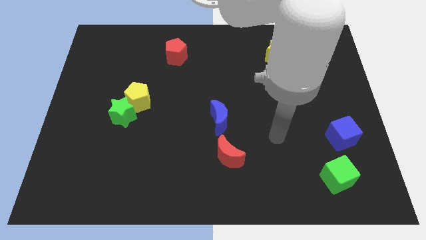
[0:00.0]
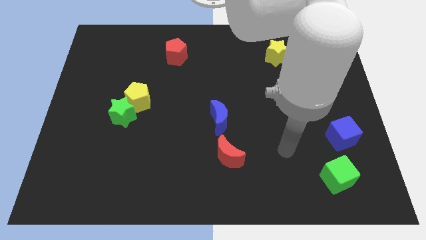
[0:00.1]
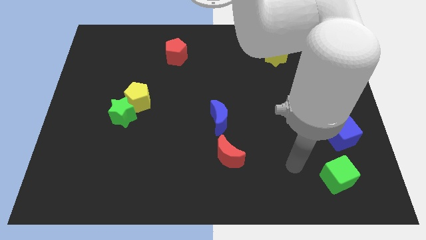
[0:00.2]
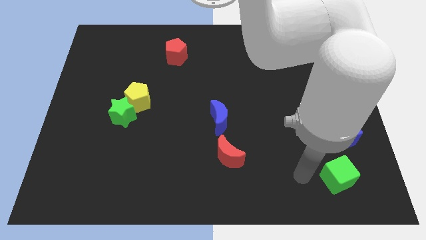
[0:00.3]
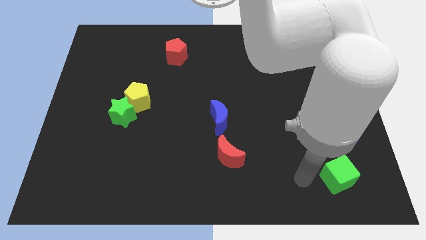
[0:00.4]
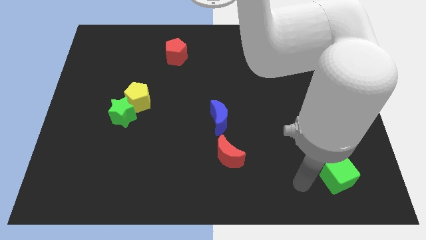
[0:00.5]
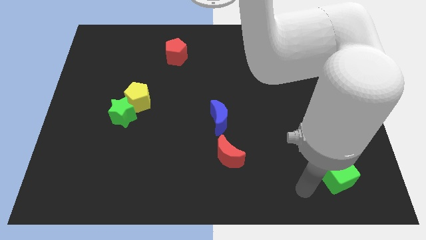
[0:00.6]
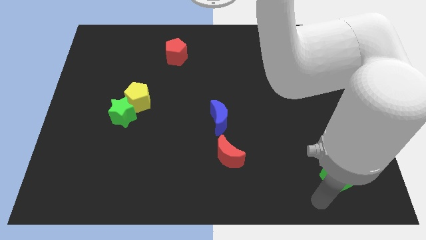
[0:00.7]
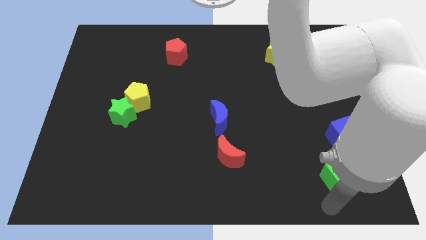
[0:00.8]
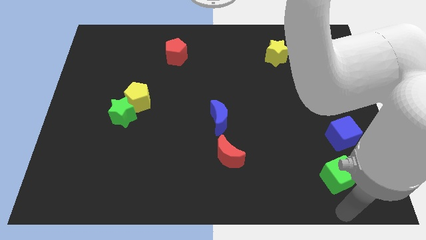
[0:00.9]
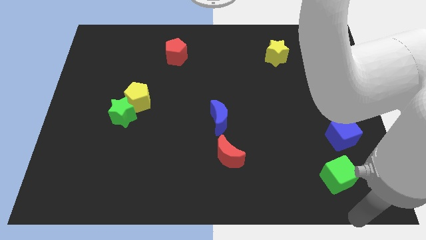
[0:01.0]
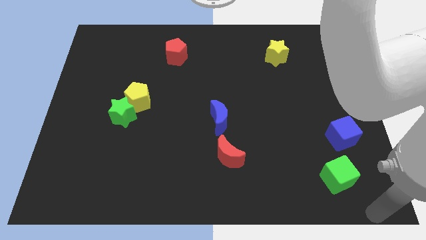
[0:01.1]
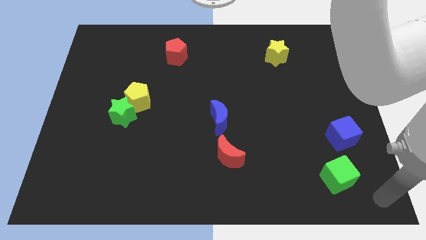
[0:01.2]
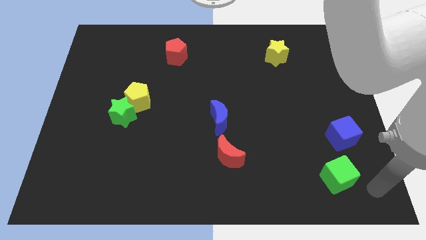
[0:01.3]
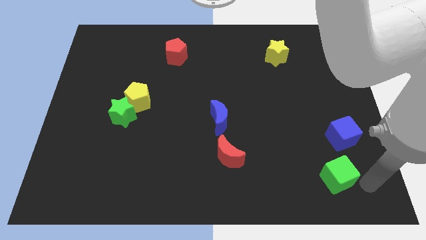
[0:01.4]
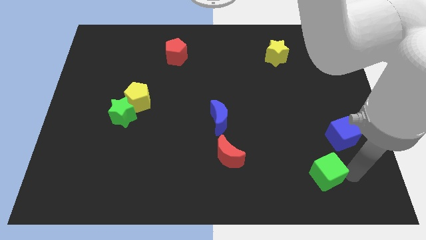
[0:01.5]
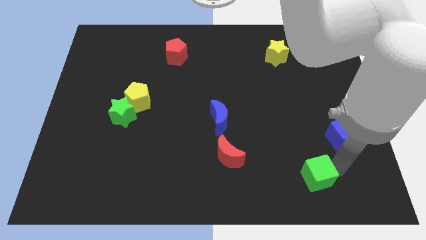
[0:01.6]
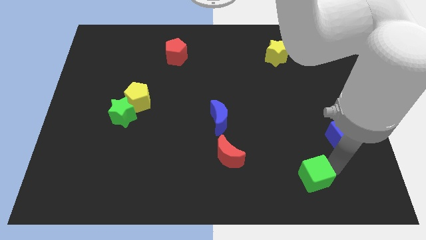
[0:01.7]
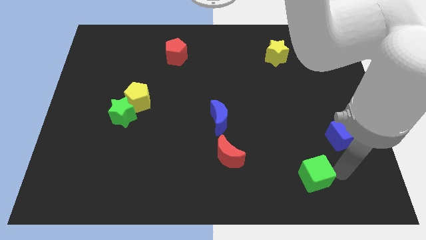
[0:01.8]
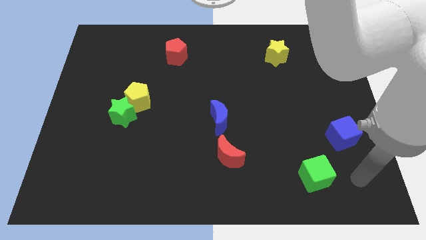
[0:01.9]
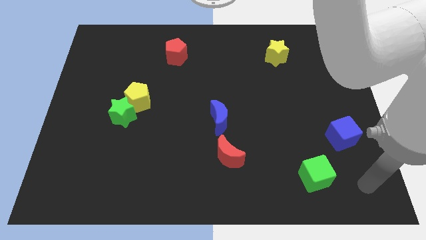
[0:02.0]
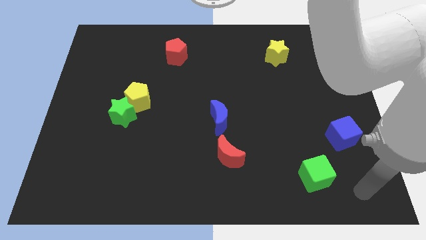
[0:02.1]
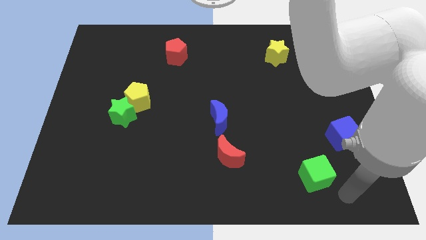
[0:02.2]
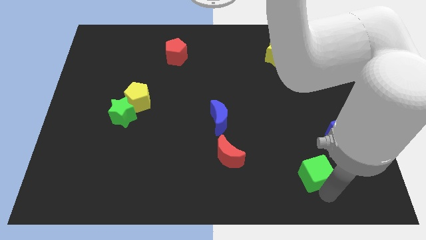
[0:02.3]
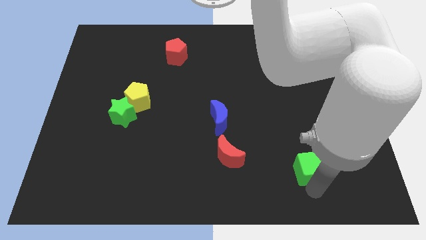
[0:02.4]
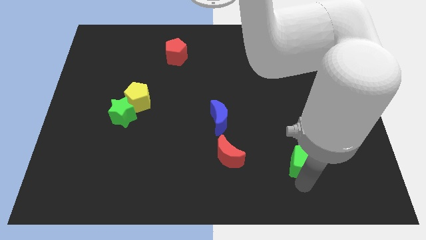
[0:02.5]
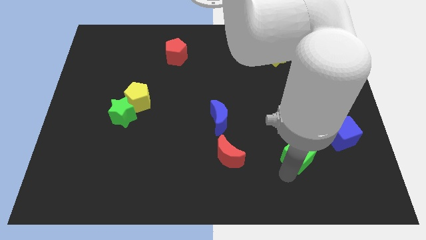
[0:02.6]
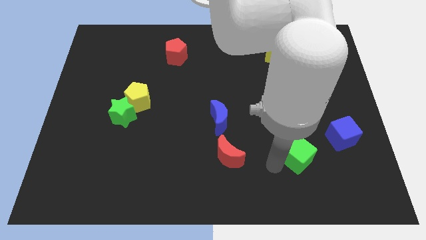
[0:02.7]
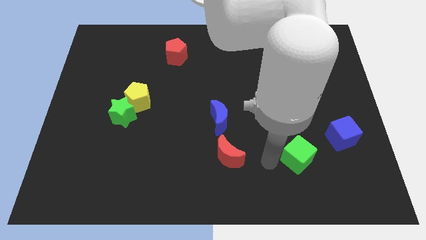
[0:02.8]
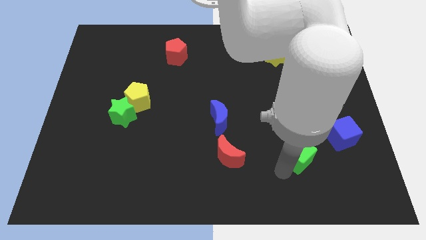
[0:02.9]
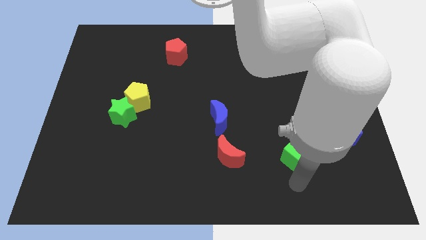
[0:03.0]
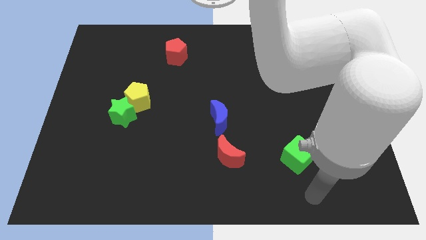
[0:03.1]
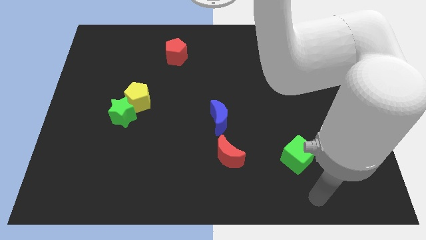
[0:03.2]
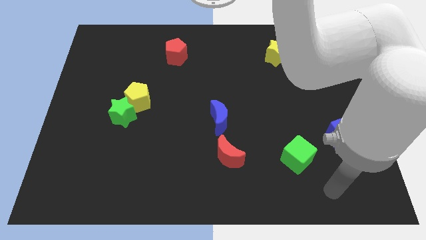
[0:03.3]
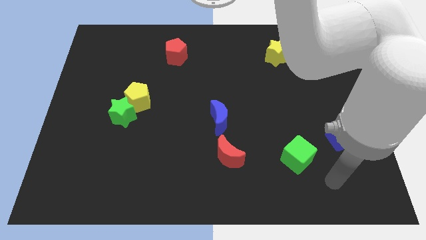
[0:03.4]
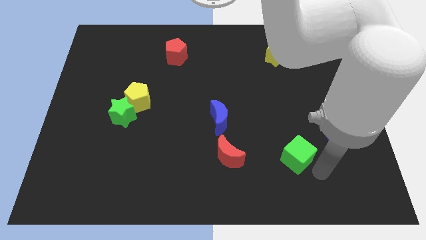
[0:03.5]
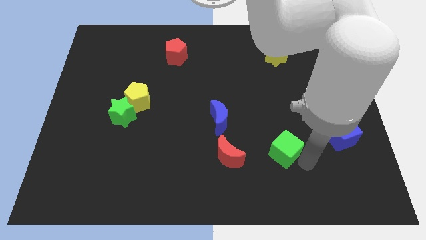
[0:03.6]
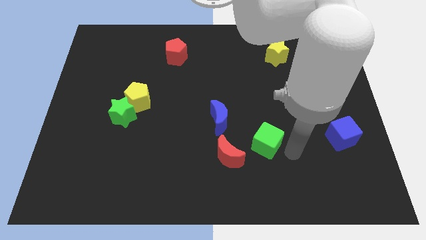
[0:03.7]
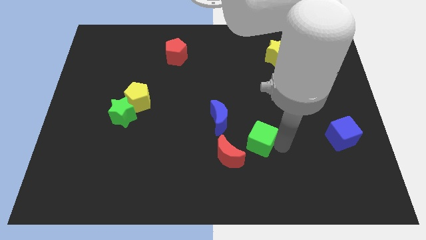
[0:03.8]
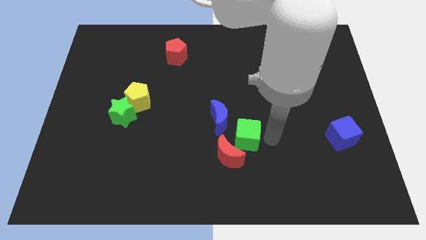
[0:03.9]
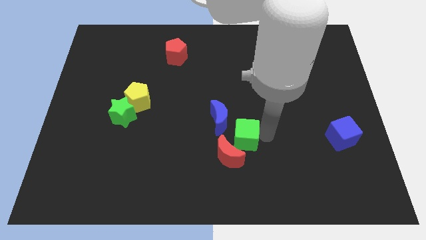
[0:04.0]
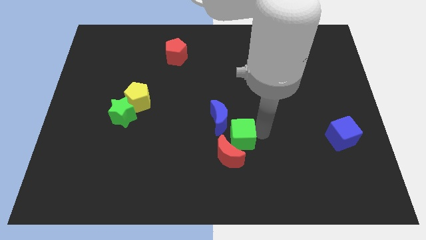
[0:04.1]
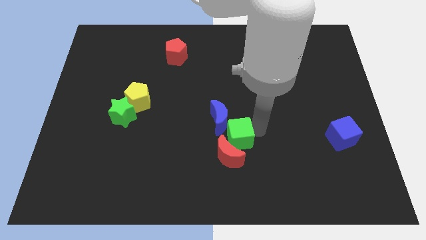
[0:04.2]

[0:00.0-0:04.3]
place the green cube above the red moon

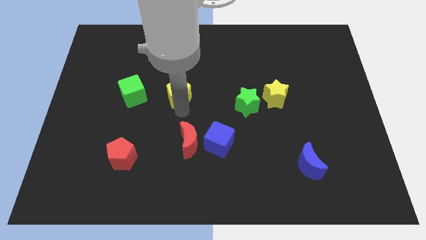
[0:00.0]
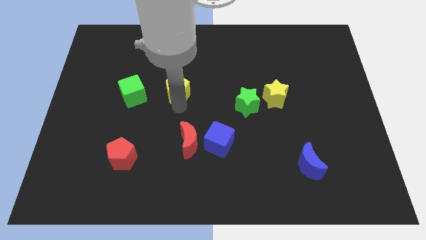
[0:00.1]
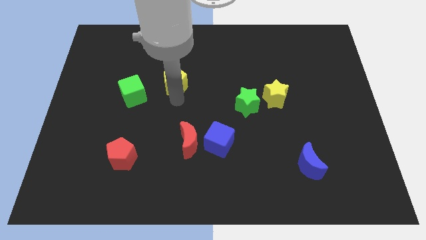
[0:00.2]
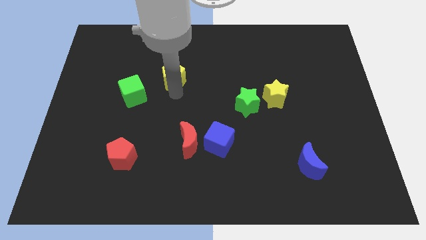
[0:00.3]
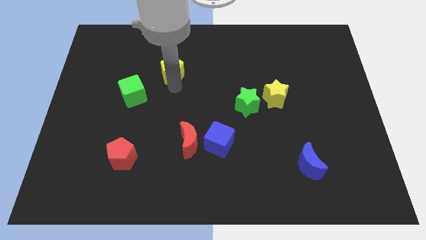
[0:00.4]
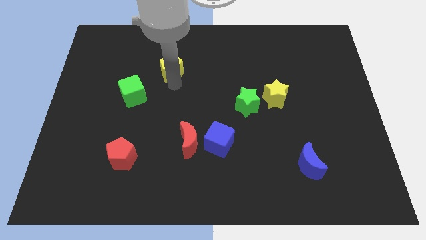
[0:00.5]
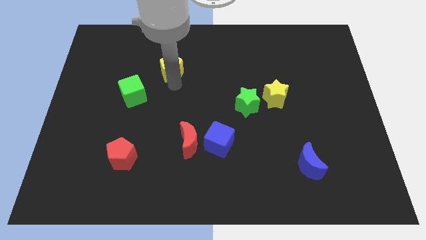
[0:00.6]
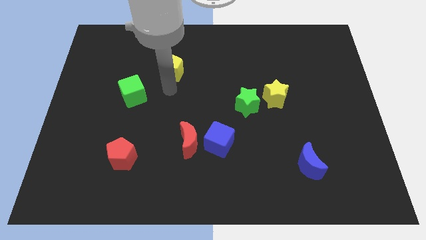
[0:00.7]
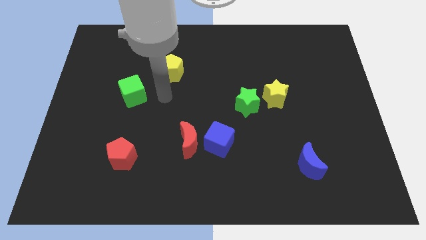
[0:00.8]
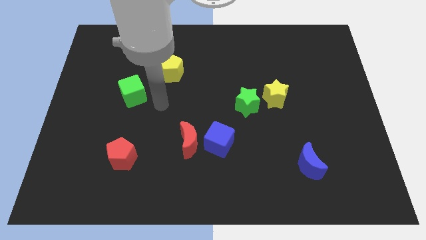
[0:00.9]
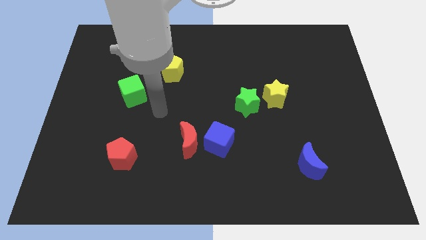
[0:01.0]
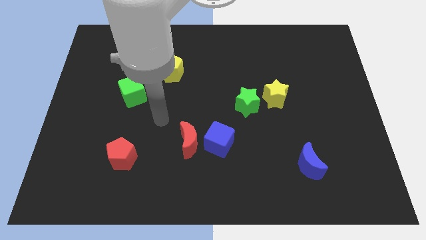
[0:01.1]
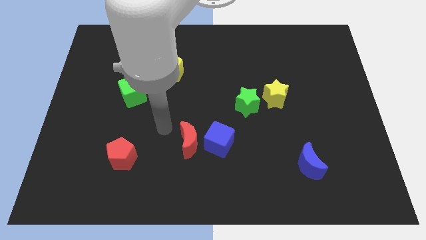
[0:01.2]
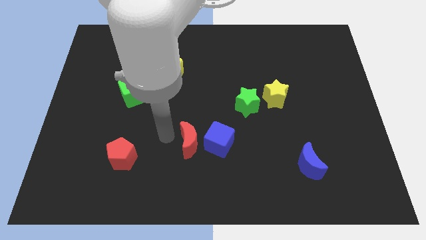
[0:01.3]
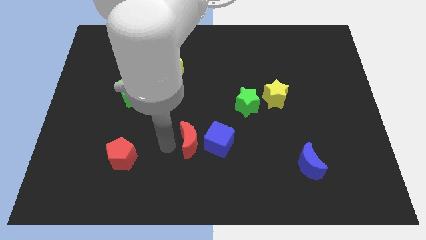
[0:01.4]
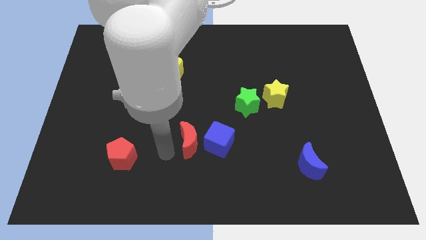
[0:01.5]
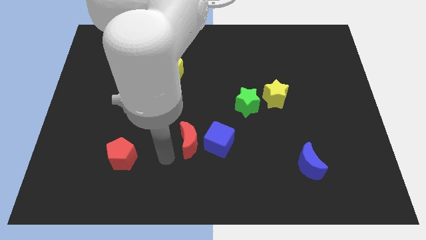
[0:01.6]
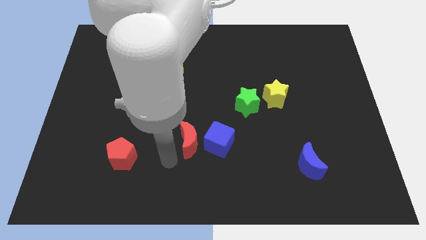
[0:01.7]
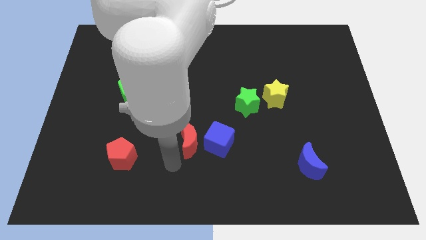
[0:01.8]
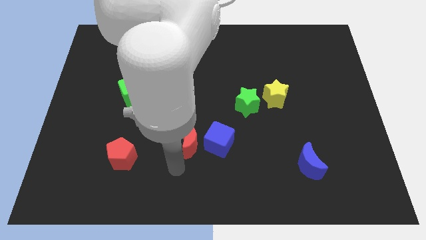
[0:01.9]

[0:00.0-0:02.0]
push the yellow pentagon slightly to the top

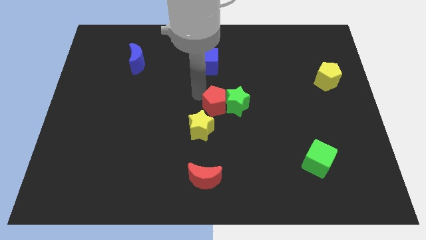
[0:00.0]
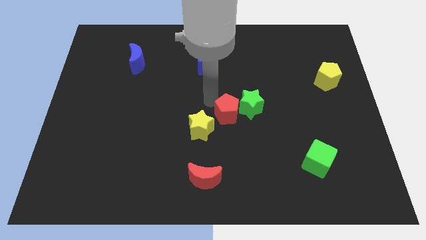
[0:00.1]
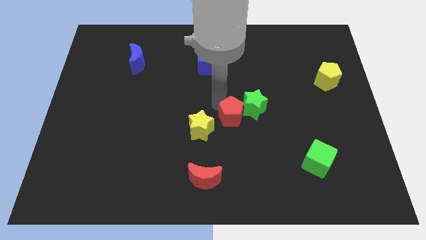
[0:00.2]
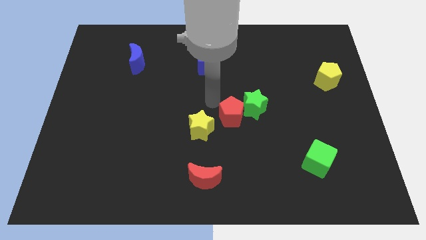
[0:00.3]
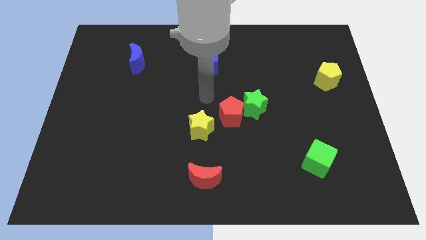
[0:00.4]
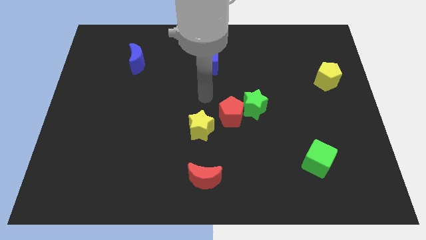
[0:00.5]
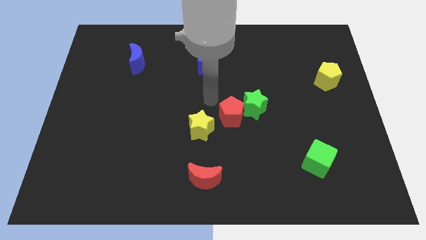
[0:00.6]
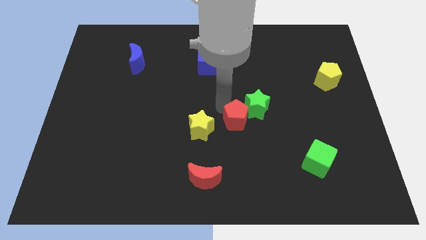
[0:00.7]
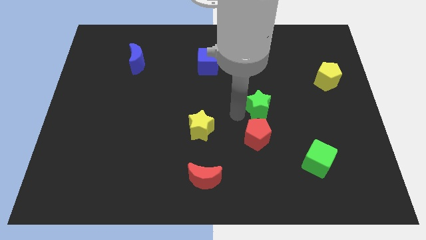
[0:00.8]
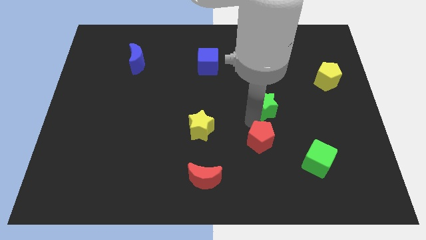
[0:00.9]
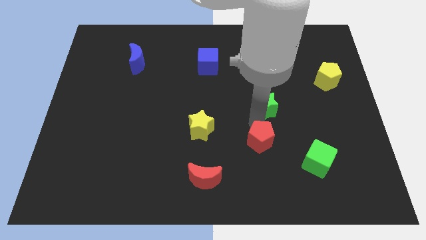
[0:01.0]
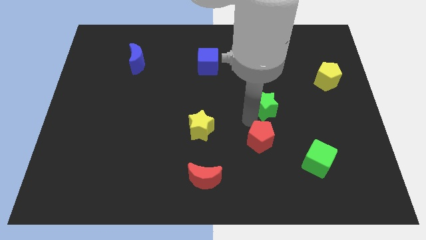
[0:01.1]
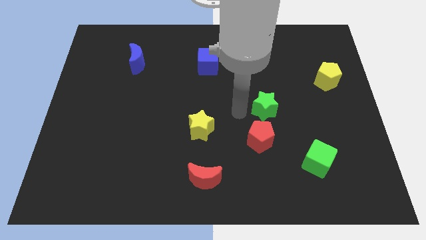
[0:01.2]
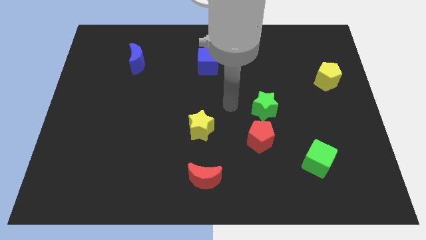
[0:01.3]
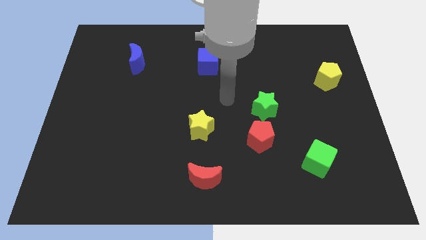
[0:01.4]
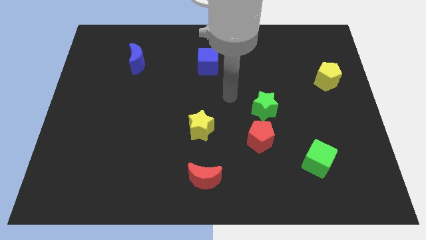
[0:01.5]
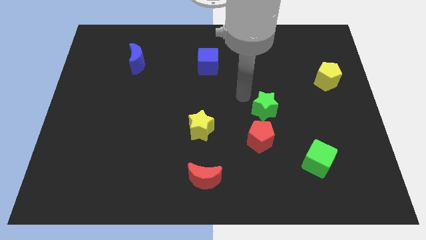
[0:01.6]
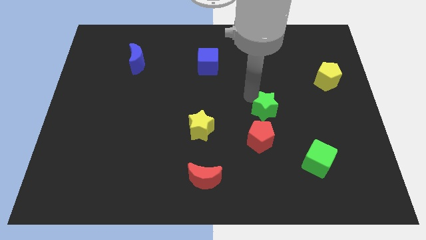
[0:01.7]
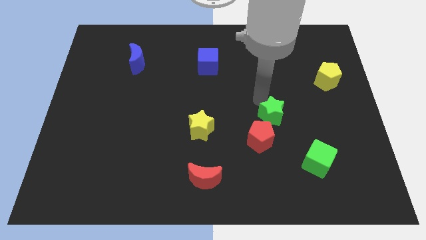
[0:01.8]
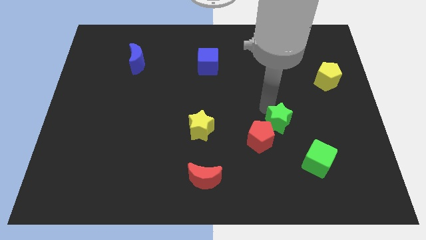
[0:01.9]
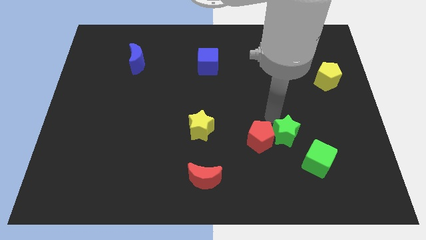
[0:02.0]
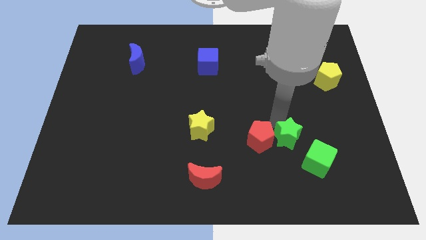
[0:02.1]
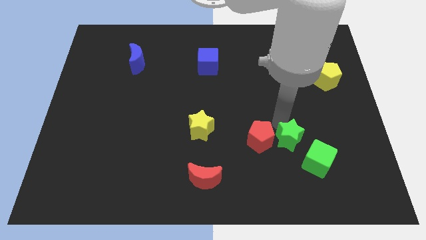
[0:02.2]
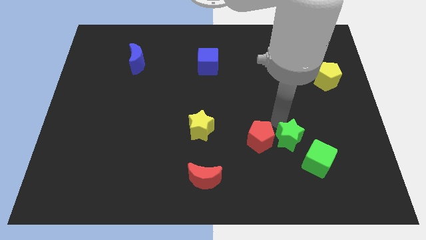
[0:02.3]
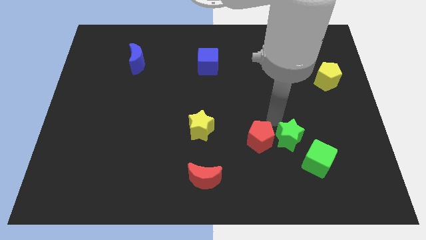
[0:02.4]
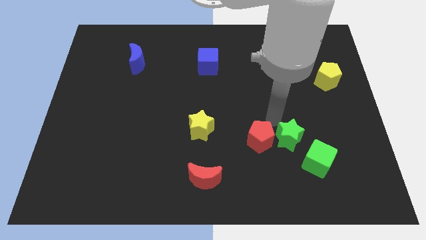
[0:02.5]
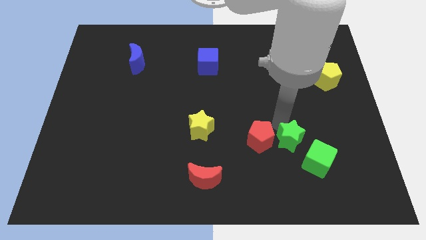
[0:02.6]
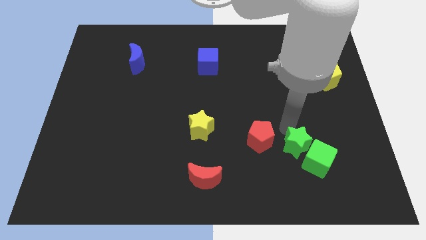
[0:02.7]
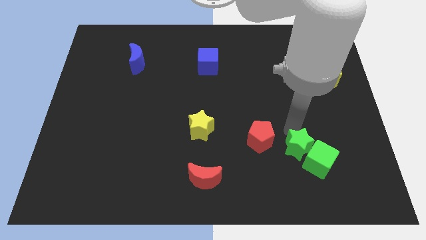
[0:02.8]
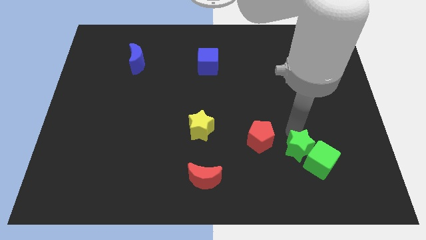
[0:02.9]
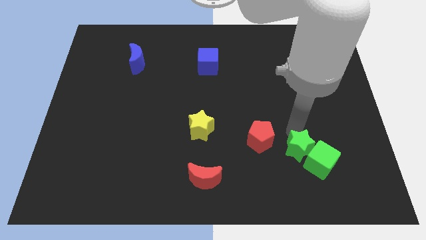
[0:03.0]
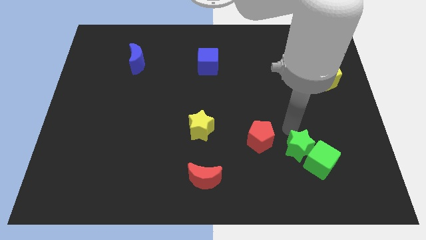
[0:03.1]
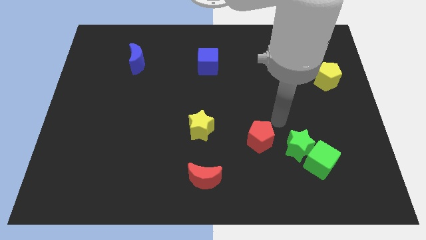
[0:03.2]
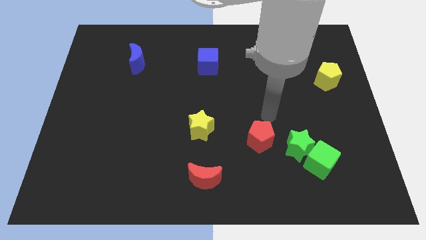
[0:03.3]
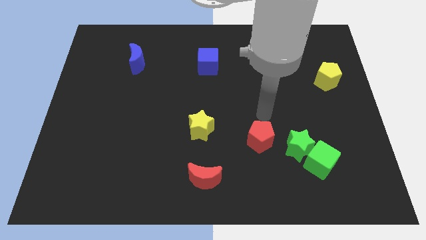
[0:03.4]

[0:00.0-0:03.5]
move the red pentagon and the green star towards the green cube
